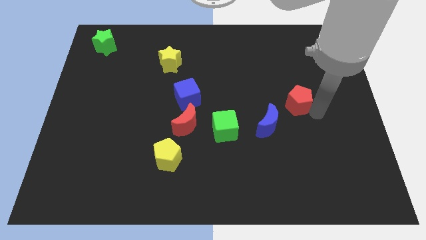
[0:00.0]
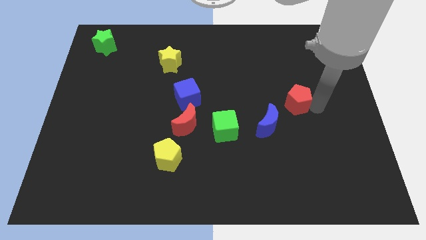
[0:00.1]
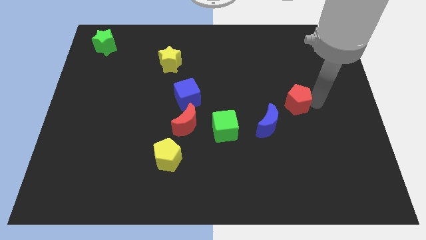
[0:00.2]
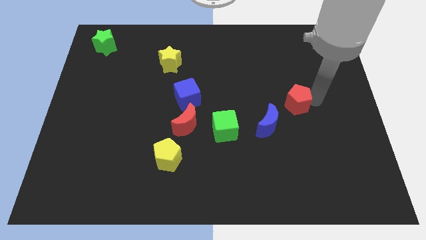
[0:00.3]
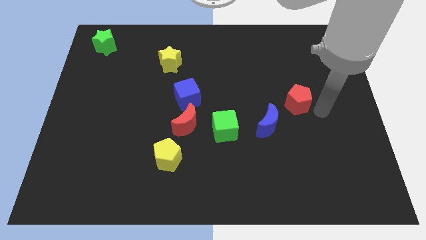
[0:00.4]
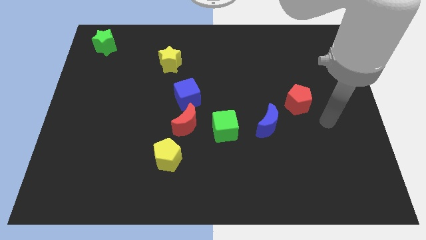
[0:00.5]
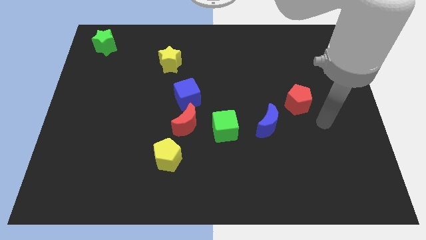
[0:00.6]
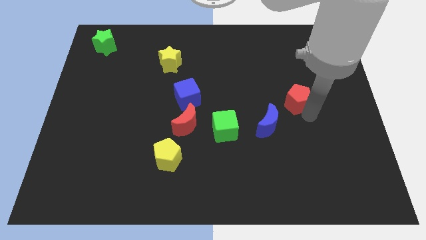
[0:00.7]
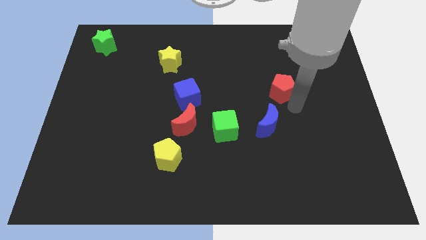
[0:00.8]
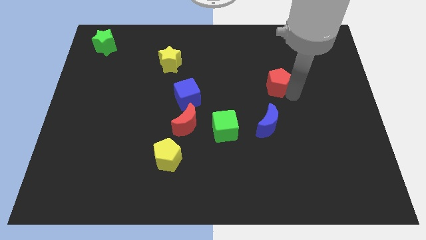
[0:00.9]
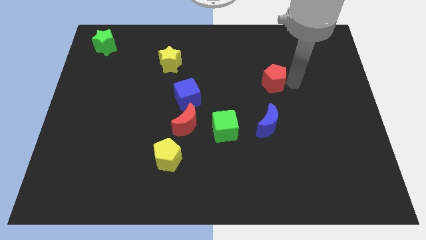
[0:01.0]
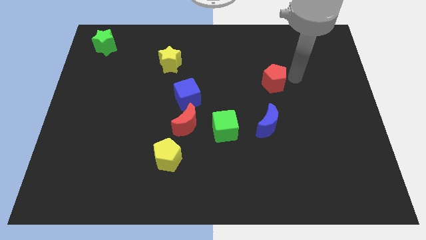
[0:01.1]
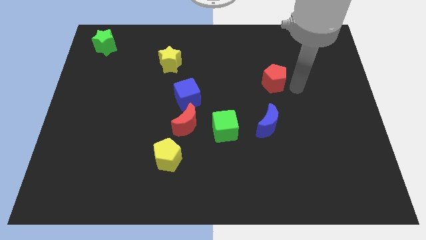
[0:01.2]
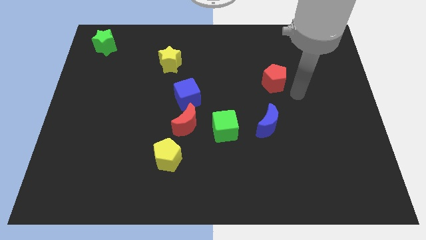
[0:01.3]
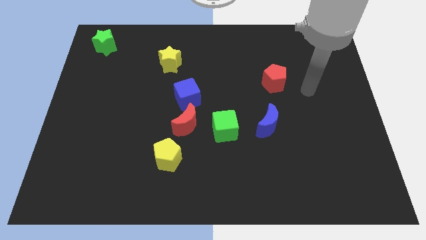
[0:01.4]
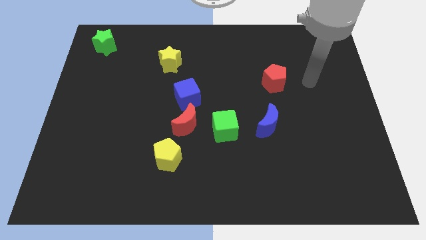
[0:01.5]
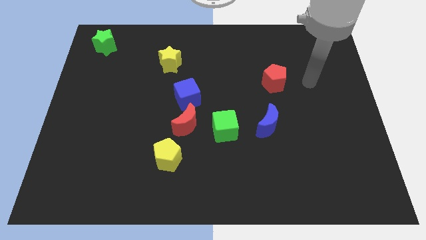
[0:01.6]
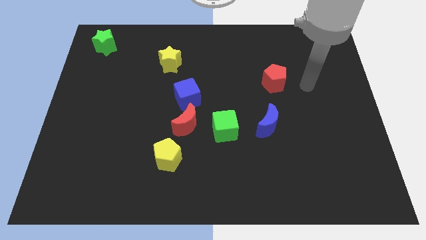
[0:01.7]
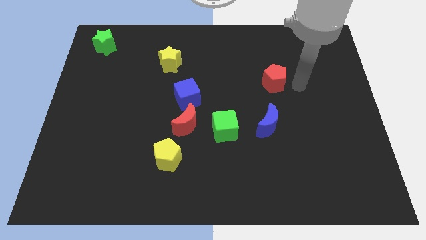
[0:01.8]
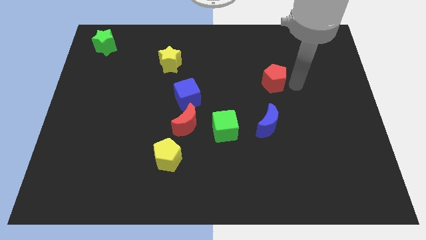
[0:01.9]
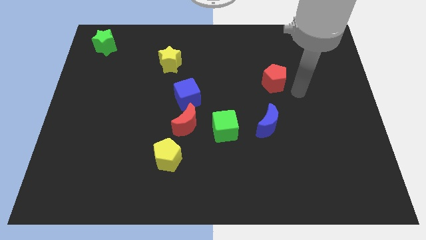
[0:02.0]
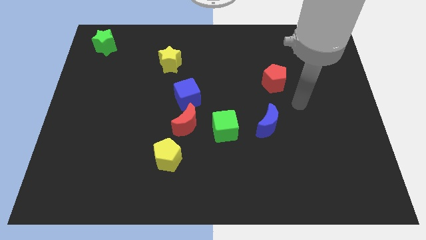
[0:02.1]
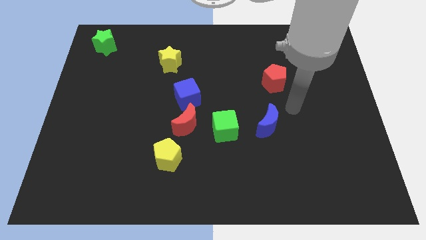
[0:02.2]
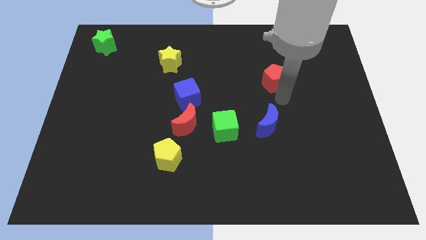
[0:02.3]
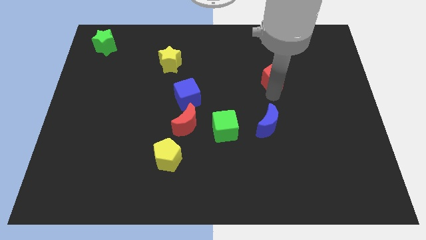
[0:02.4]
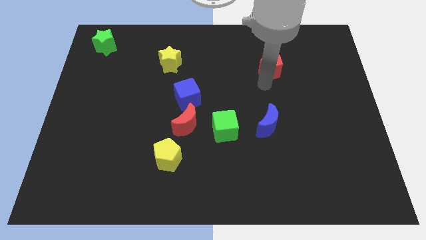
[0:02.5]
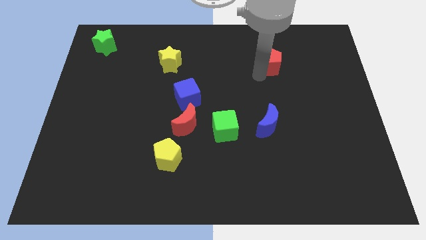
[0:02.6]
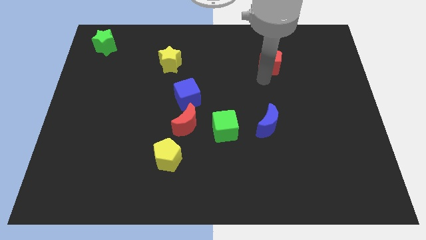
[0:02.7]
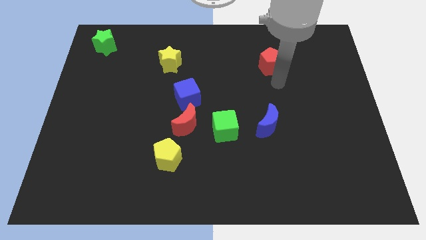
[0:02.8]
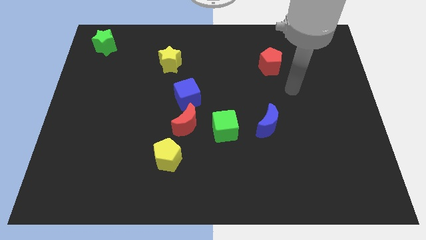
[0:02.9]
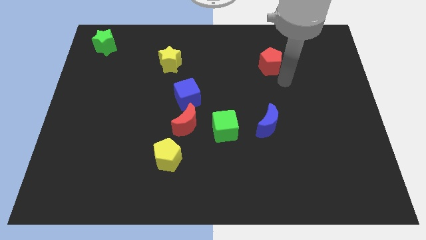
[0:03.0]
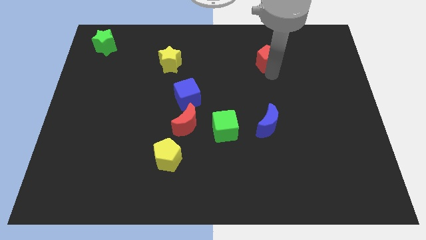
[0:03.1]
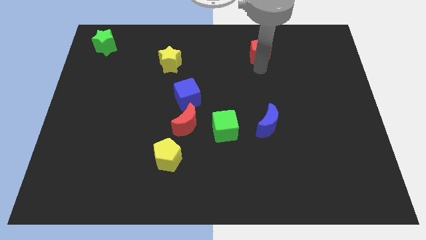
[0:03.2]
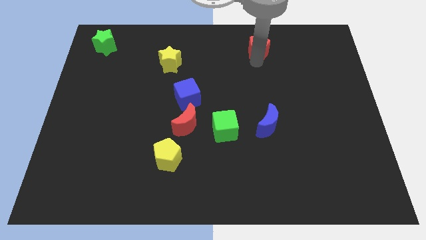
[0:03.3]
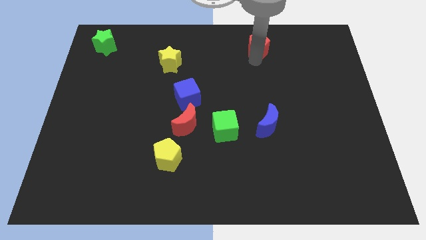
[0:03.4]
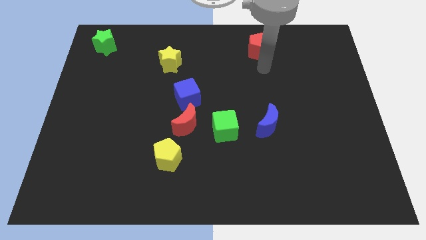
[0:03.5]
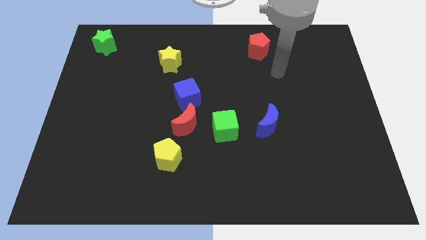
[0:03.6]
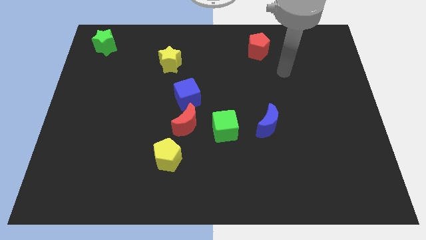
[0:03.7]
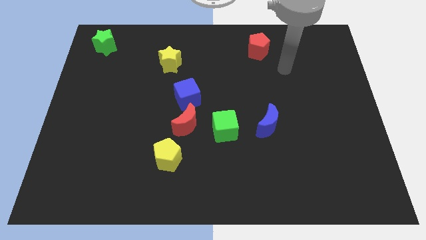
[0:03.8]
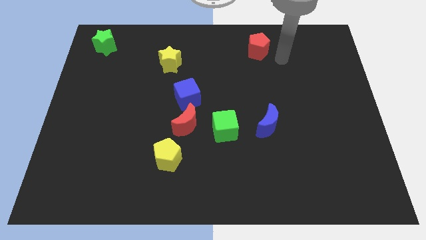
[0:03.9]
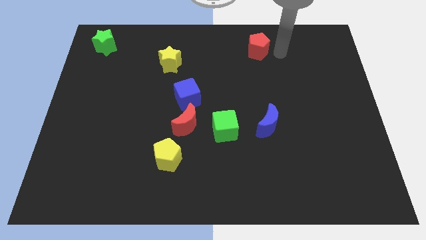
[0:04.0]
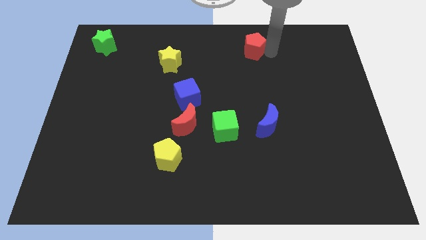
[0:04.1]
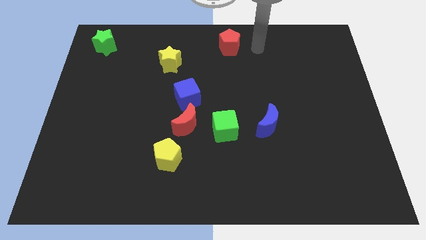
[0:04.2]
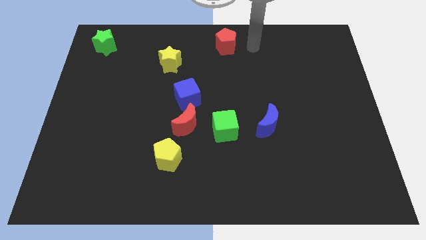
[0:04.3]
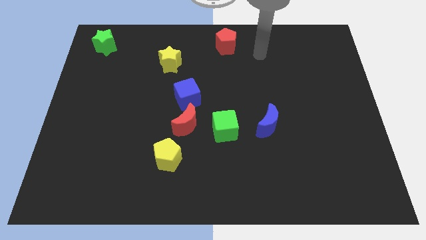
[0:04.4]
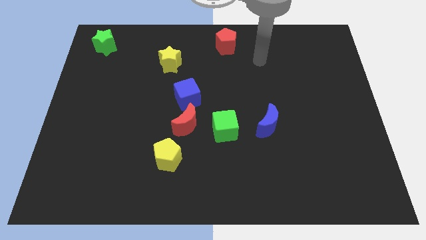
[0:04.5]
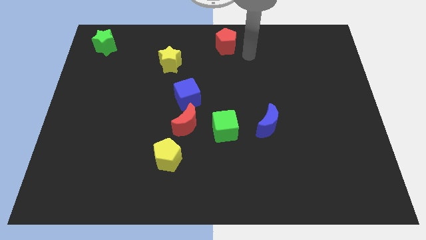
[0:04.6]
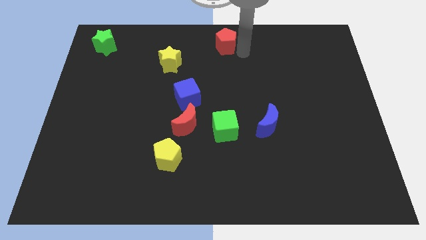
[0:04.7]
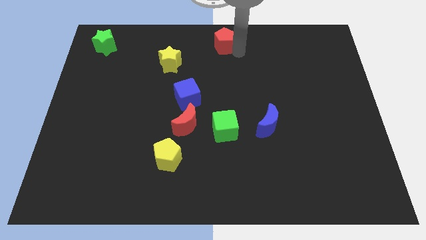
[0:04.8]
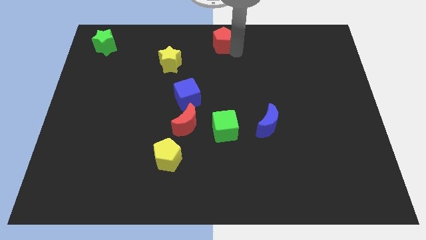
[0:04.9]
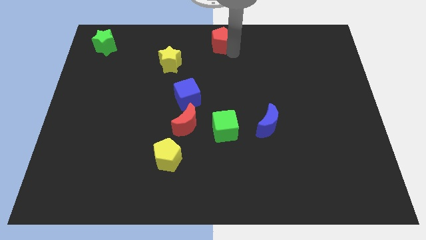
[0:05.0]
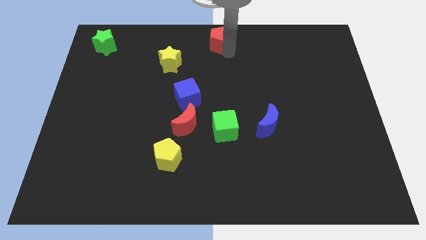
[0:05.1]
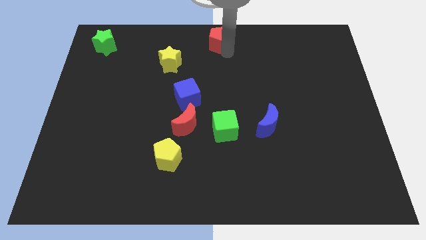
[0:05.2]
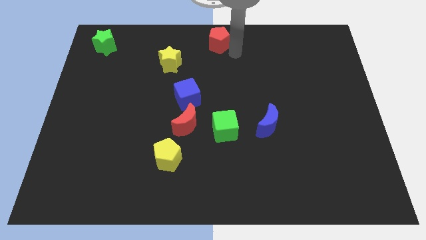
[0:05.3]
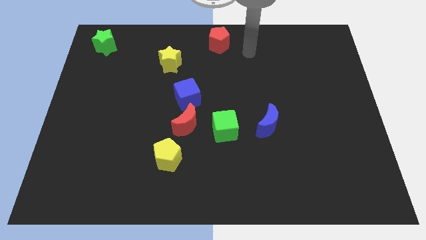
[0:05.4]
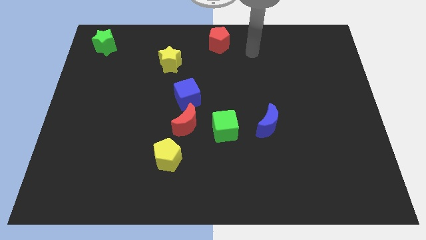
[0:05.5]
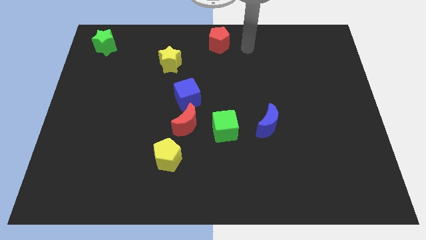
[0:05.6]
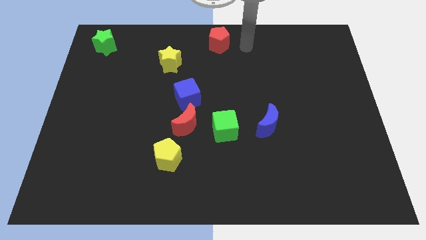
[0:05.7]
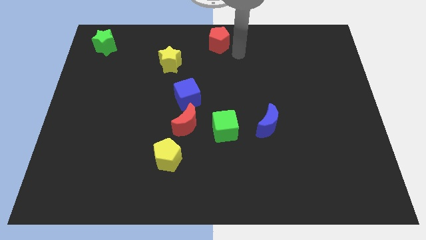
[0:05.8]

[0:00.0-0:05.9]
move the red pentagon towards the top center of the board

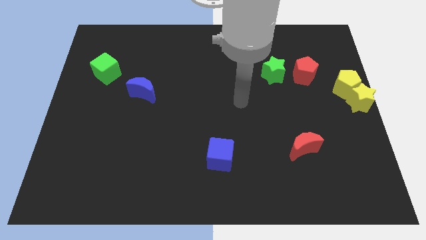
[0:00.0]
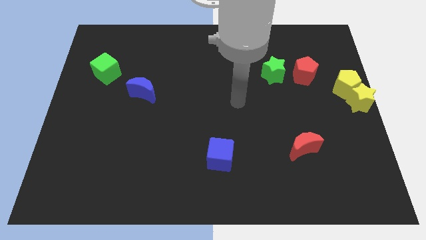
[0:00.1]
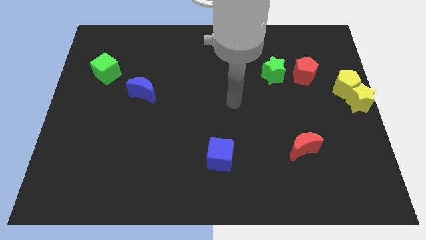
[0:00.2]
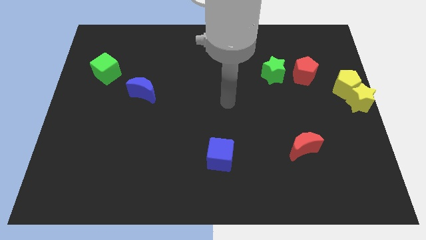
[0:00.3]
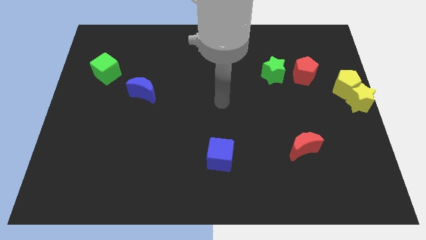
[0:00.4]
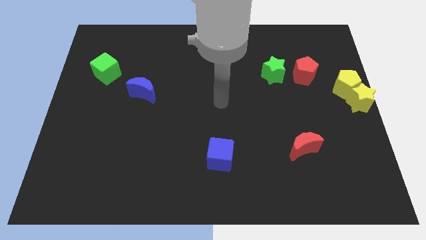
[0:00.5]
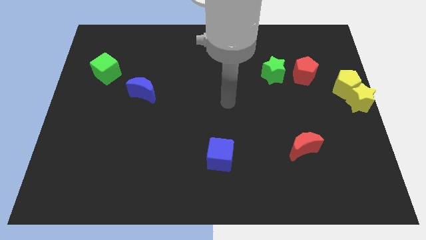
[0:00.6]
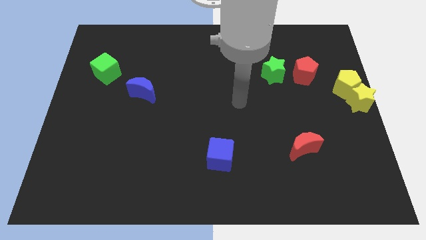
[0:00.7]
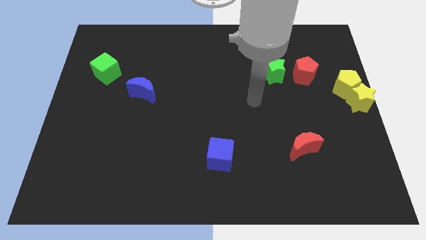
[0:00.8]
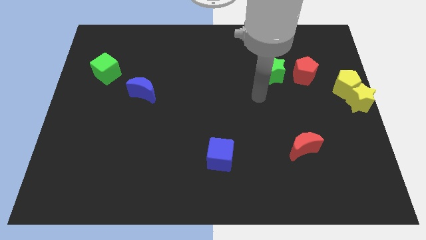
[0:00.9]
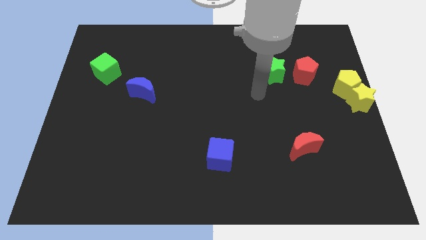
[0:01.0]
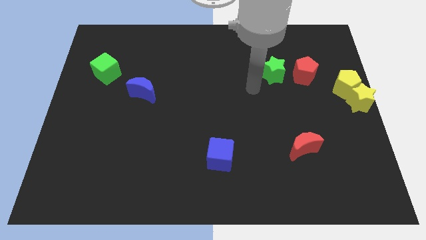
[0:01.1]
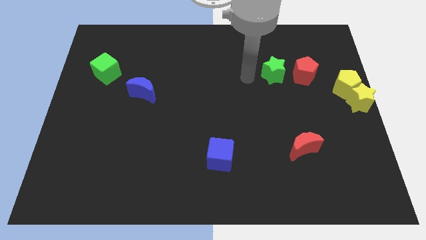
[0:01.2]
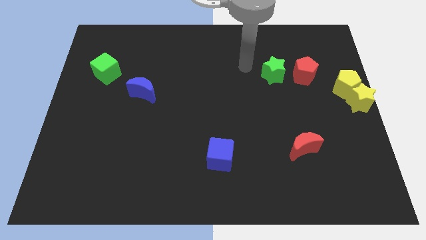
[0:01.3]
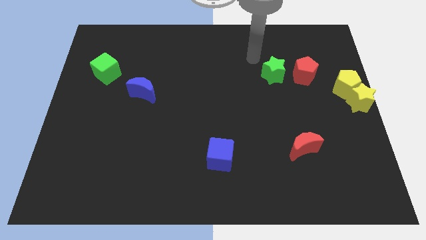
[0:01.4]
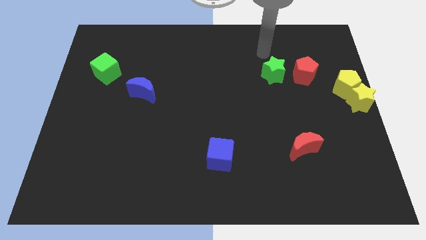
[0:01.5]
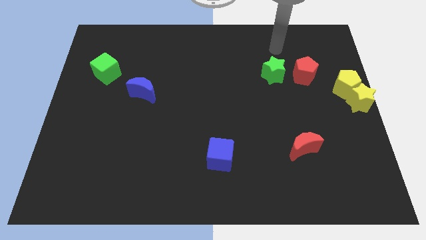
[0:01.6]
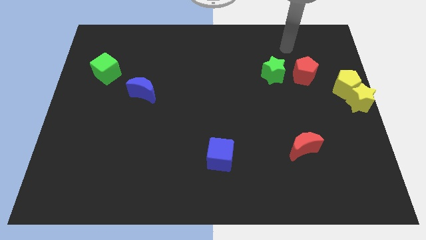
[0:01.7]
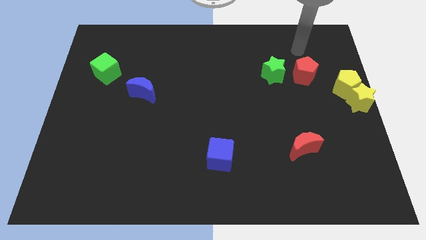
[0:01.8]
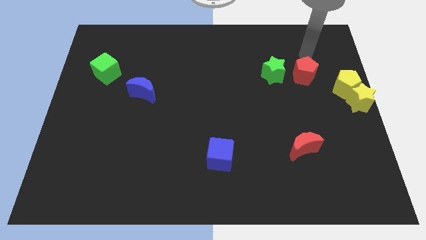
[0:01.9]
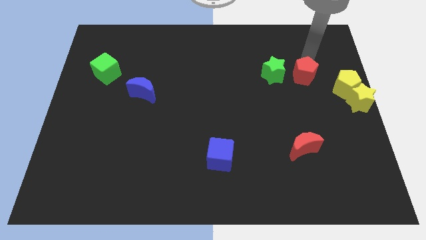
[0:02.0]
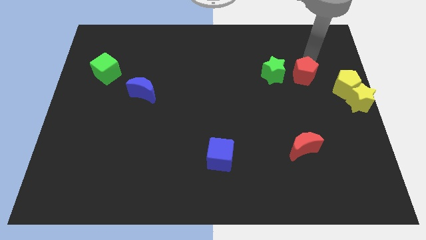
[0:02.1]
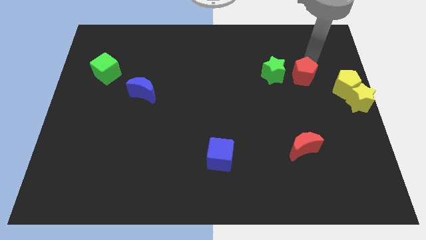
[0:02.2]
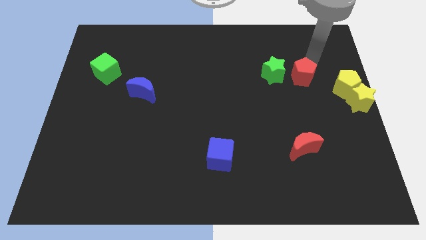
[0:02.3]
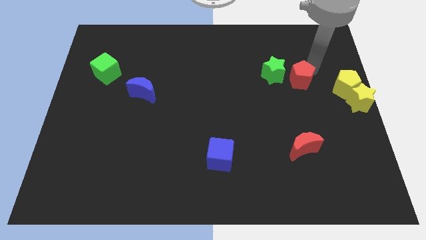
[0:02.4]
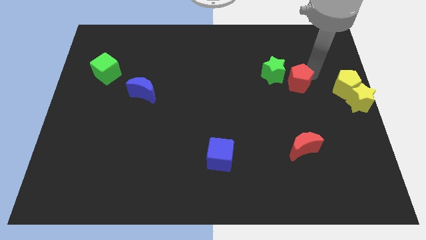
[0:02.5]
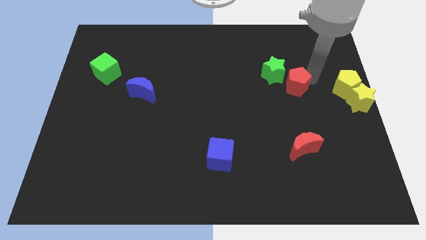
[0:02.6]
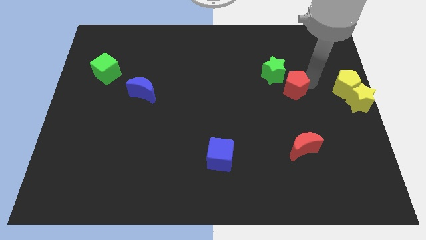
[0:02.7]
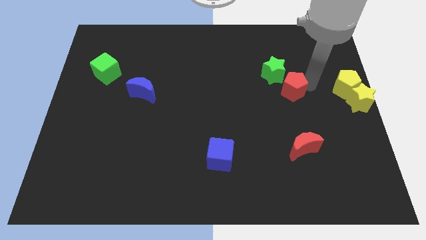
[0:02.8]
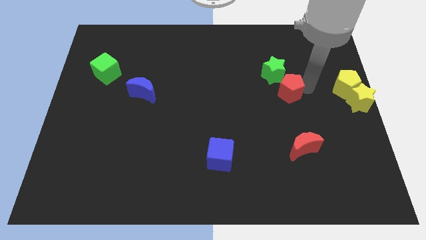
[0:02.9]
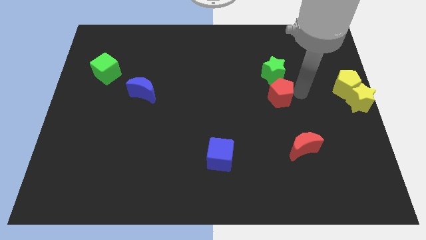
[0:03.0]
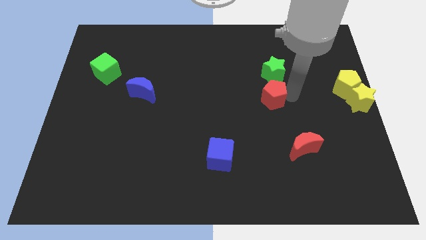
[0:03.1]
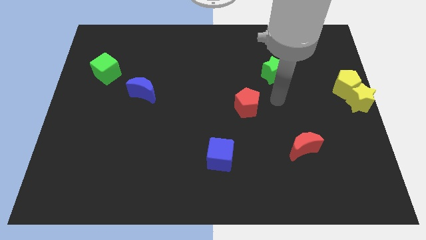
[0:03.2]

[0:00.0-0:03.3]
drag the red pentagon vertically below the green star
